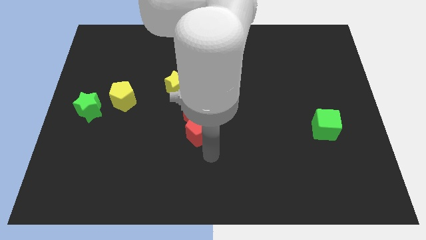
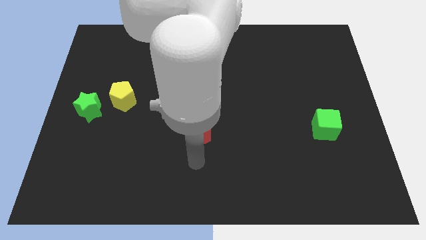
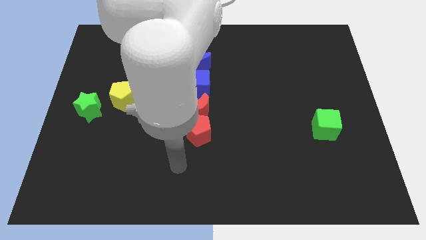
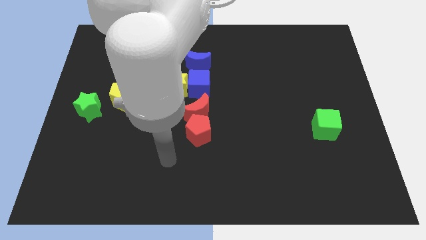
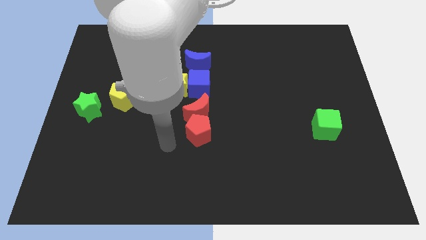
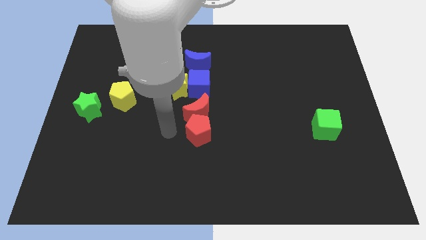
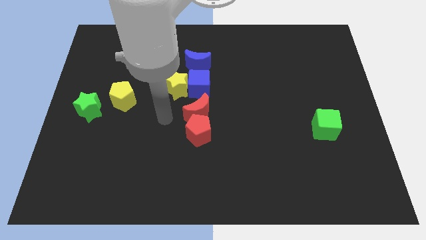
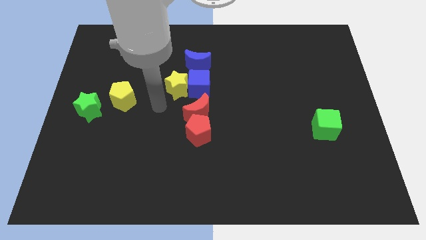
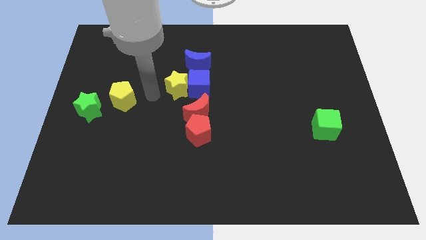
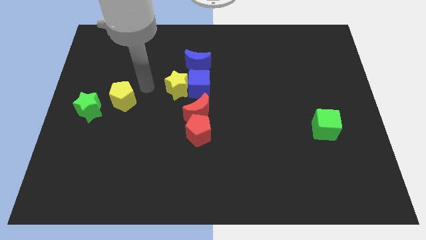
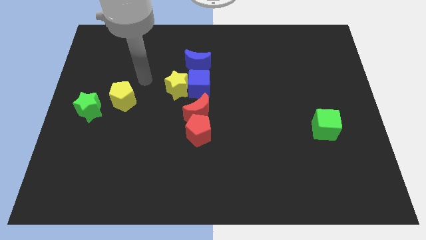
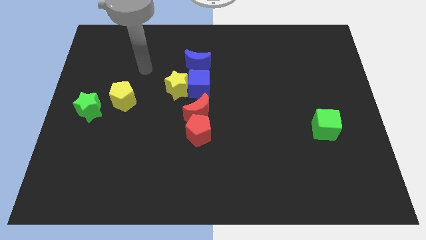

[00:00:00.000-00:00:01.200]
move your arm away from red pentagon

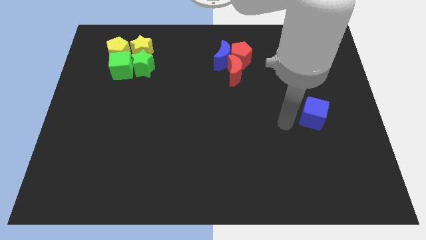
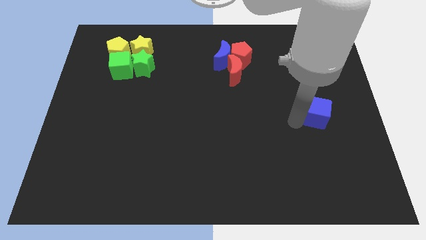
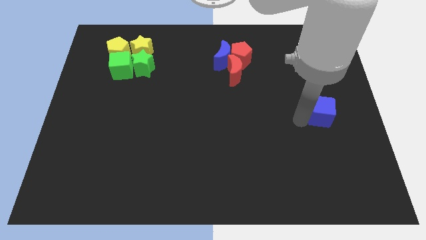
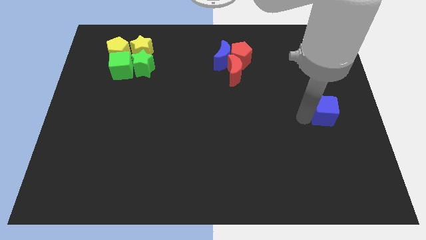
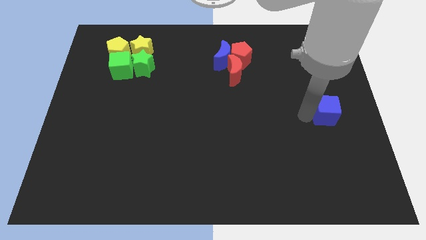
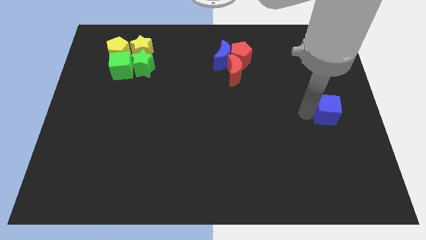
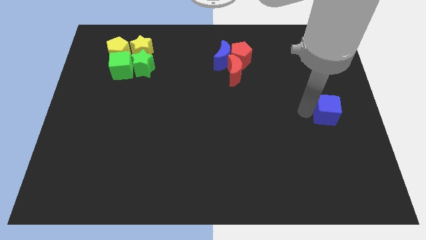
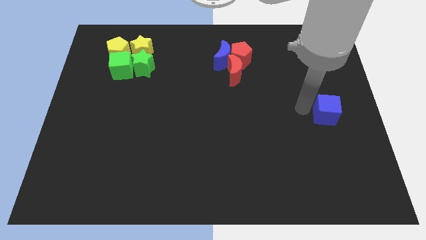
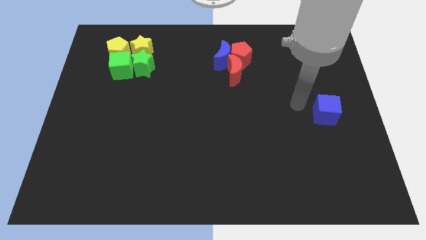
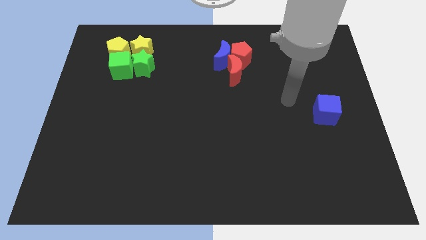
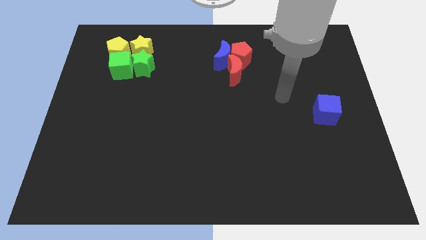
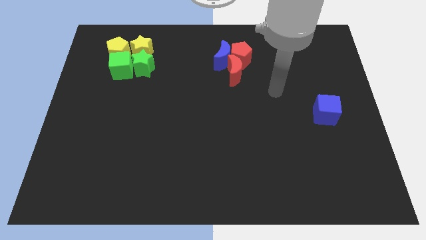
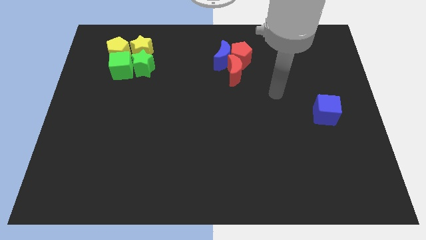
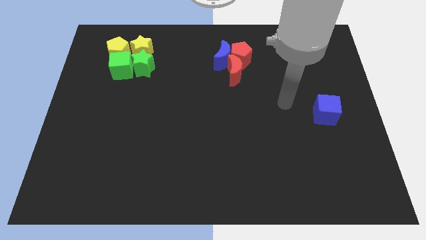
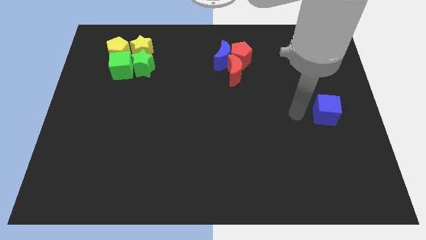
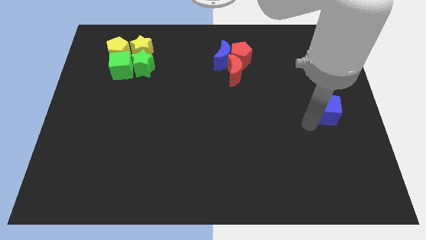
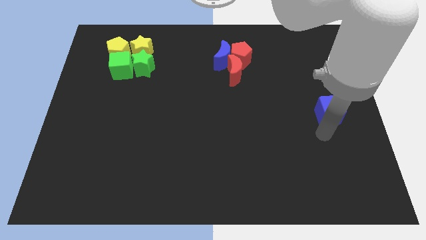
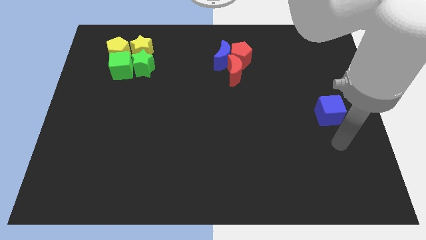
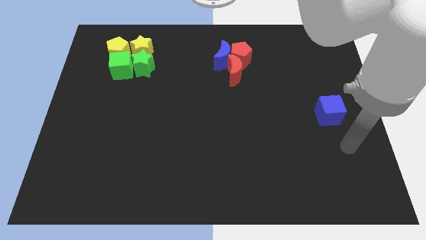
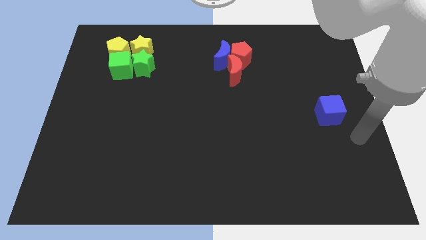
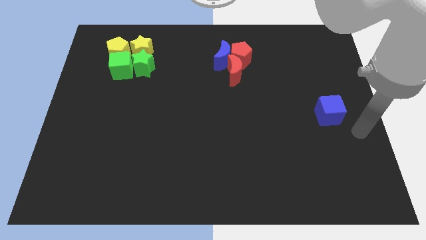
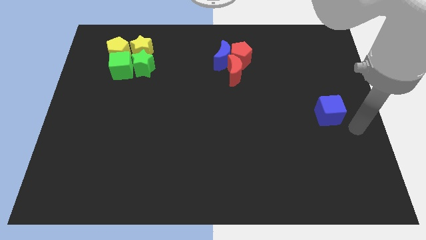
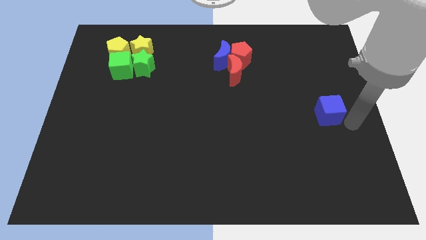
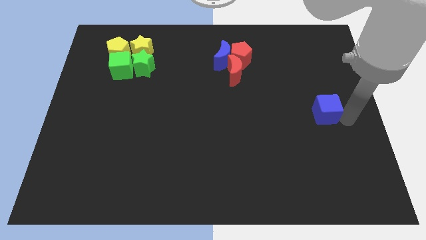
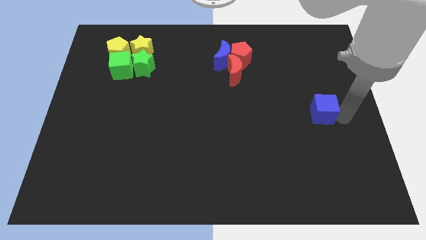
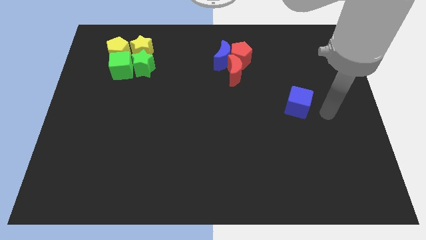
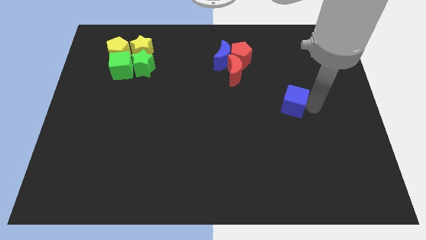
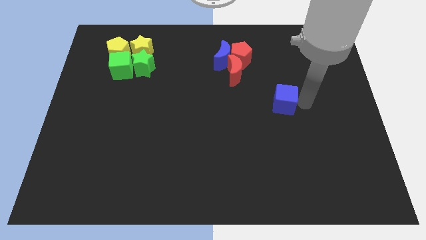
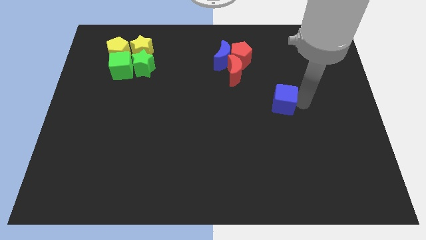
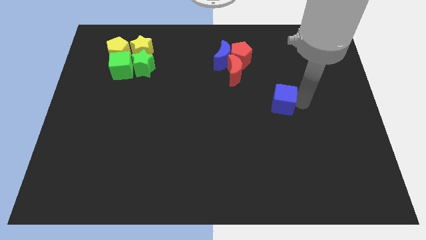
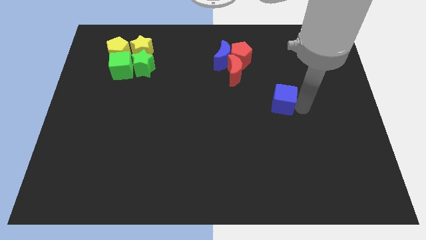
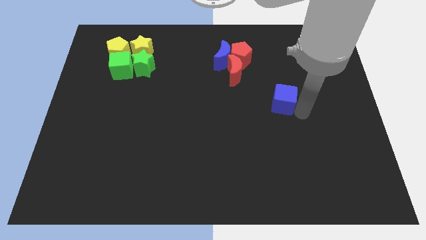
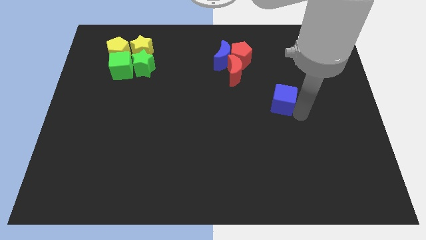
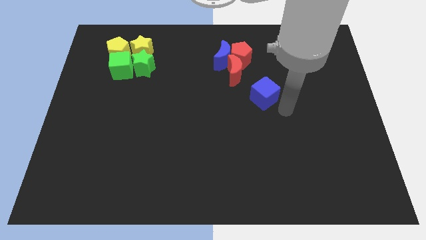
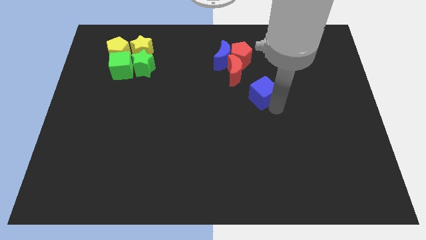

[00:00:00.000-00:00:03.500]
drag the blue cube towards the red blocks

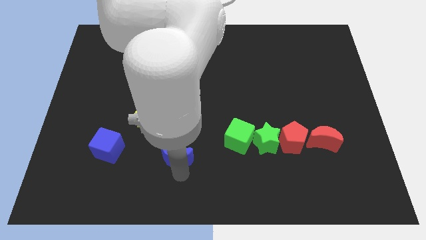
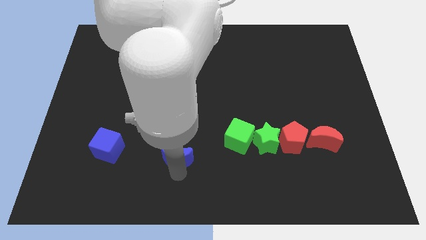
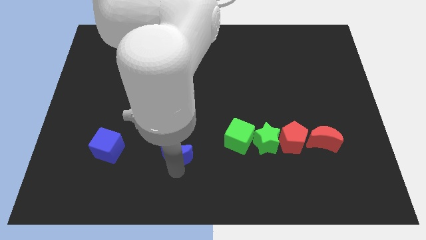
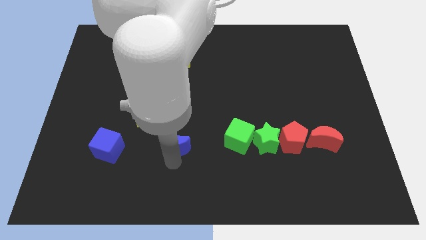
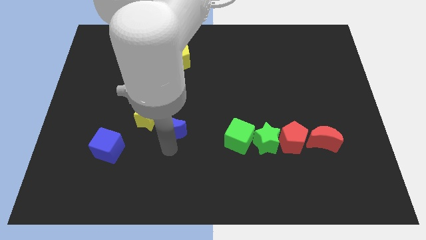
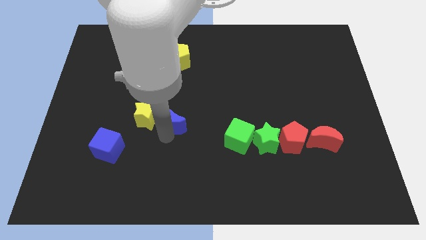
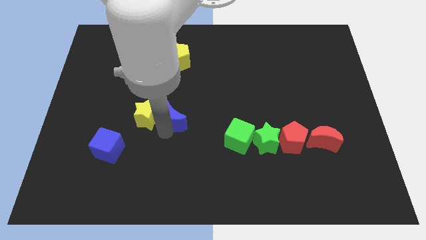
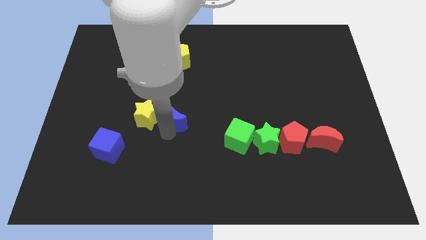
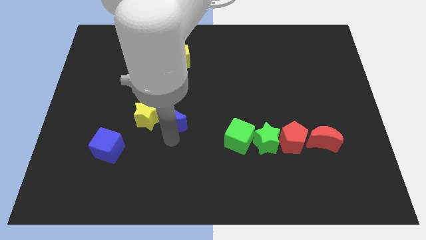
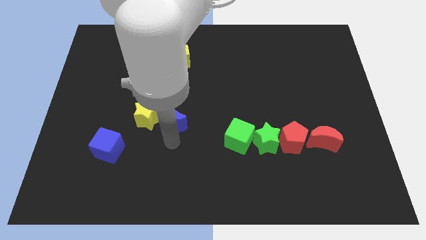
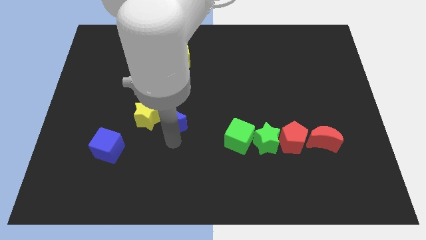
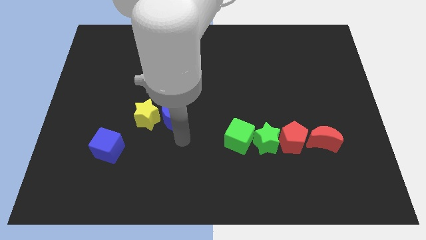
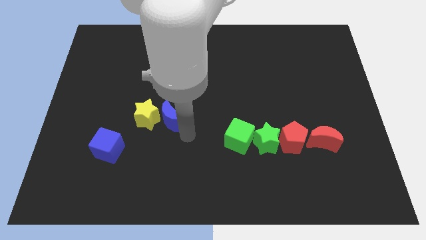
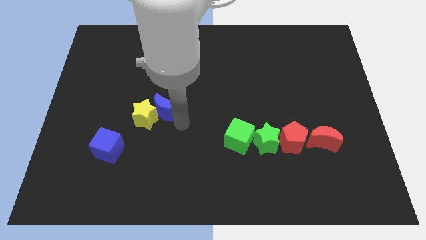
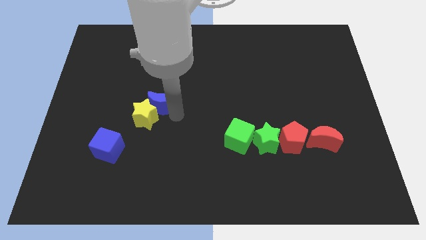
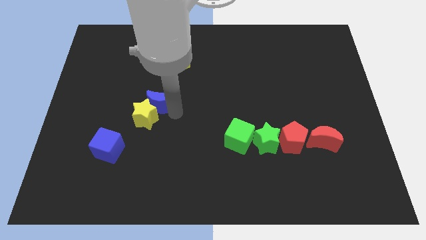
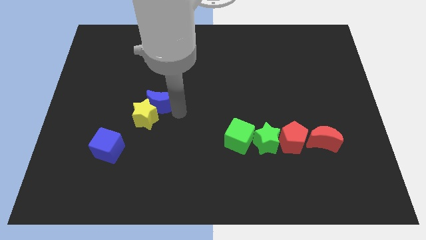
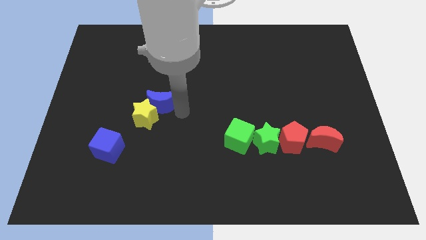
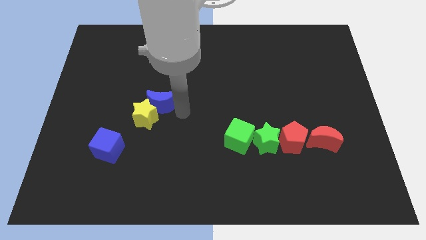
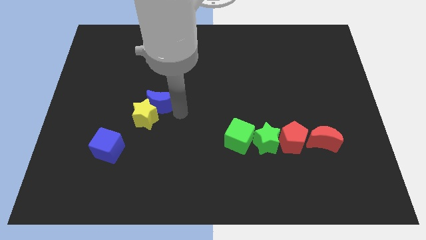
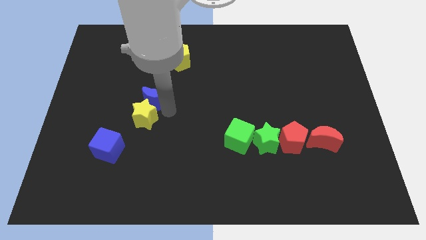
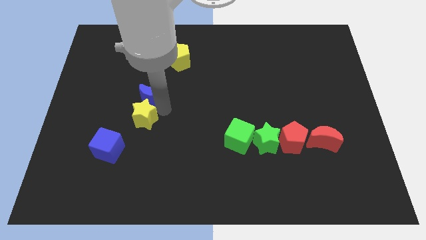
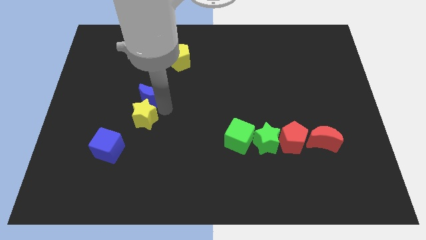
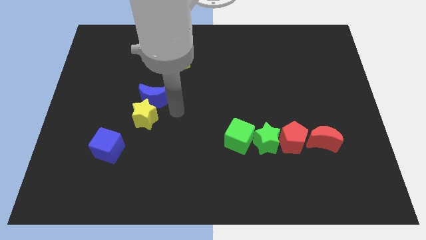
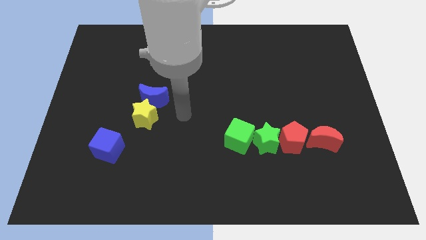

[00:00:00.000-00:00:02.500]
push the blue crescent to the top of the yellow star

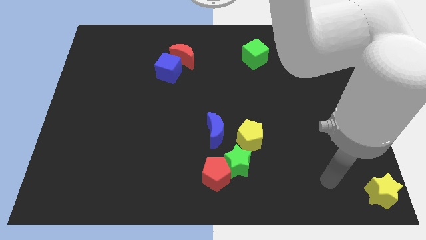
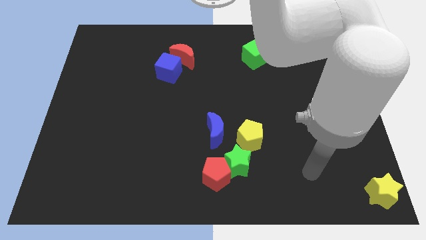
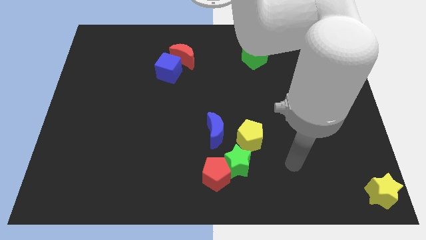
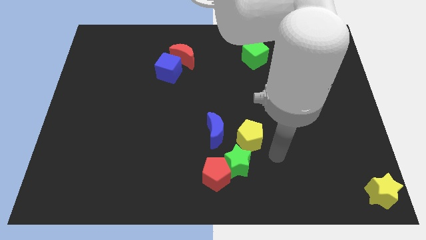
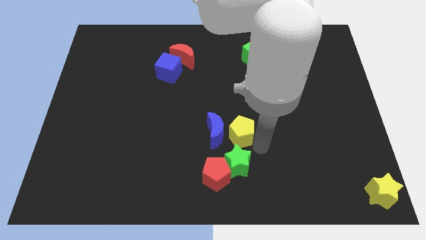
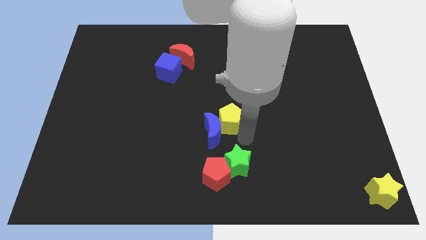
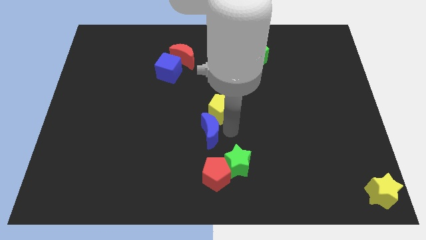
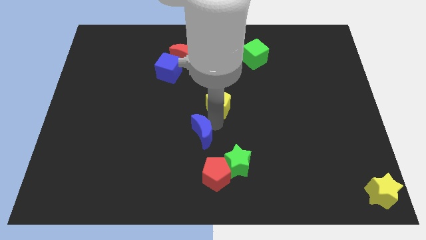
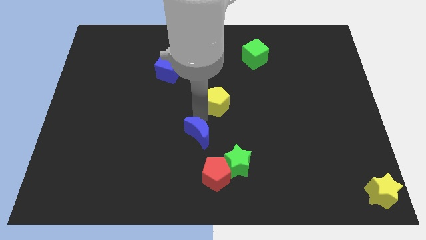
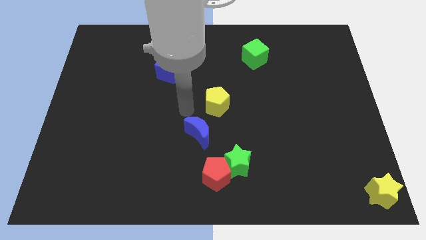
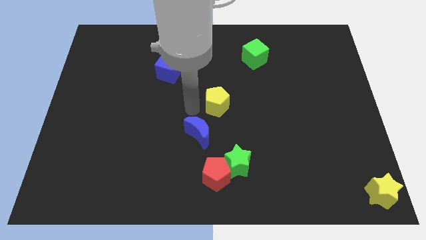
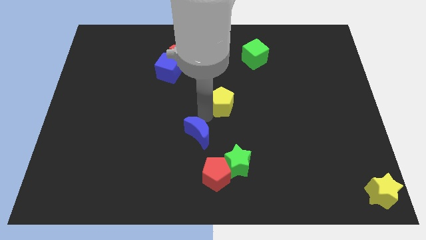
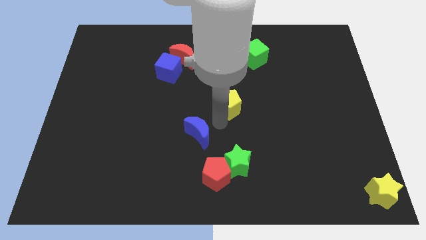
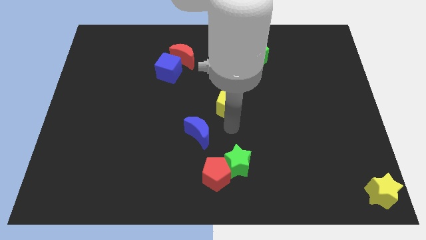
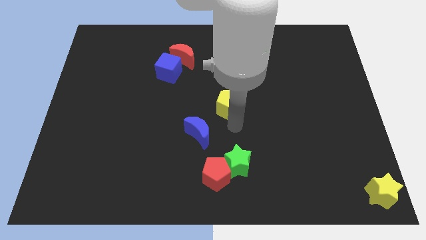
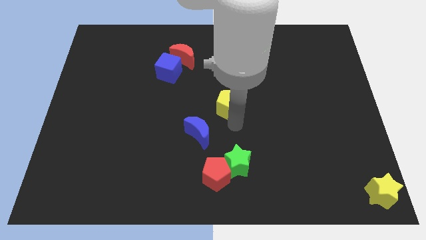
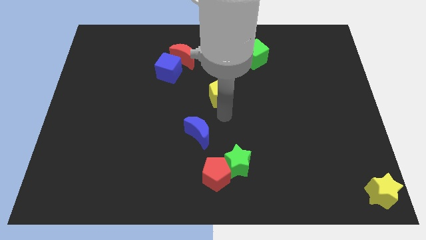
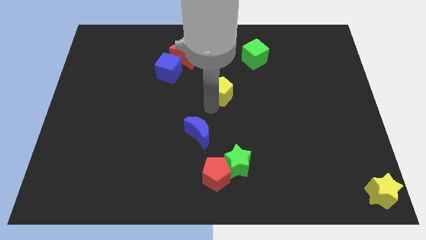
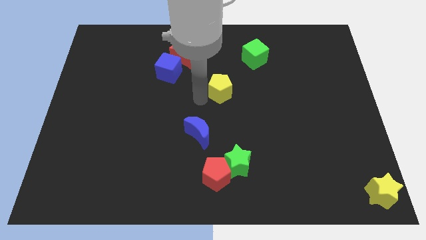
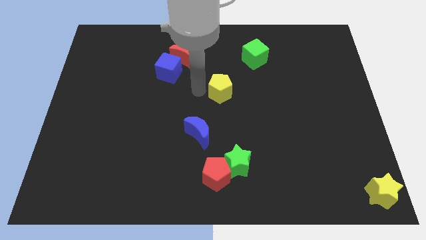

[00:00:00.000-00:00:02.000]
push the yellow pentagon to the center
